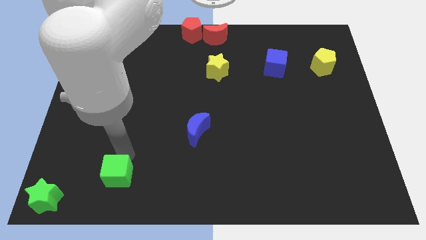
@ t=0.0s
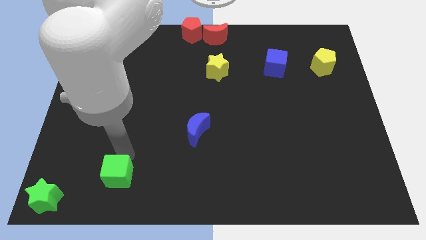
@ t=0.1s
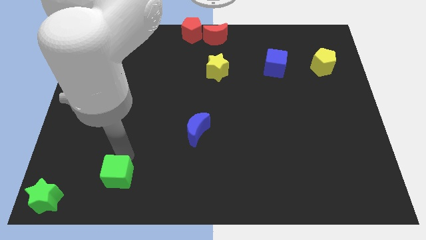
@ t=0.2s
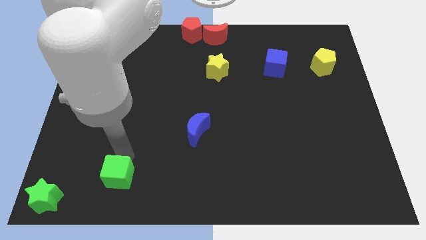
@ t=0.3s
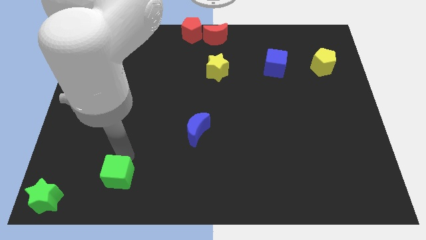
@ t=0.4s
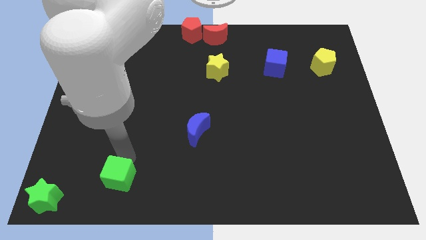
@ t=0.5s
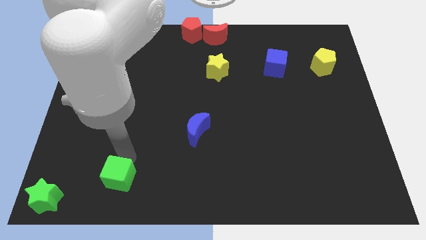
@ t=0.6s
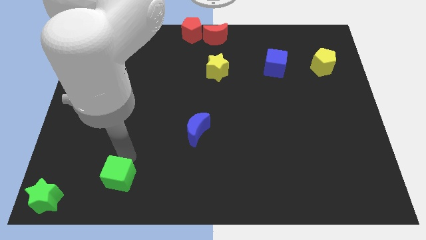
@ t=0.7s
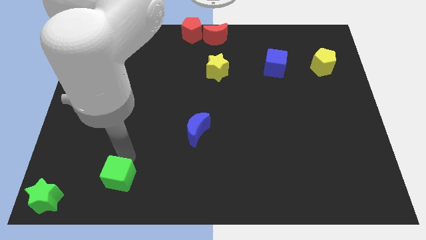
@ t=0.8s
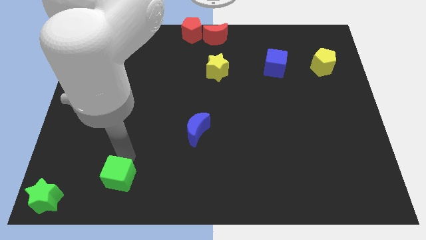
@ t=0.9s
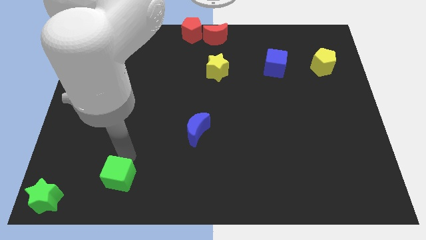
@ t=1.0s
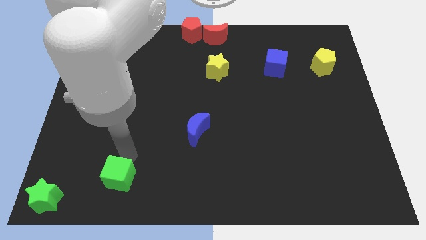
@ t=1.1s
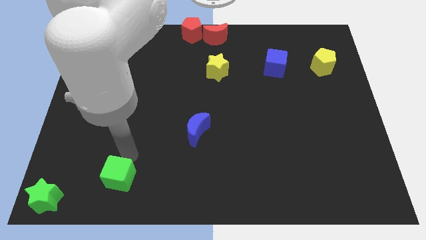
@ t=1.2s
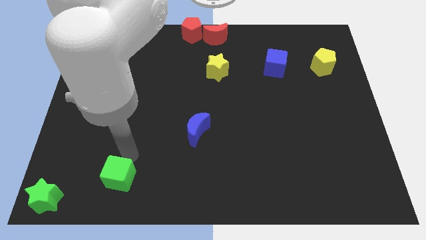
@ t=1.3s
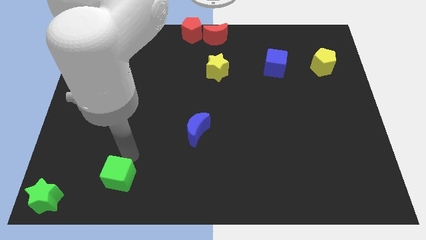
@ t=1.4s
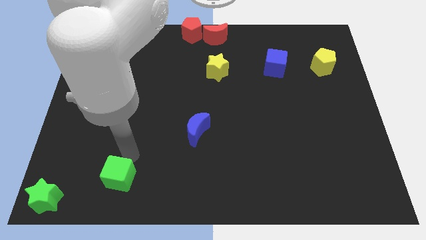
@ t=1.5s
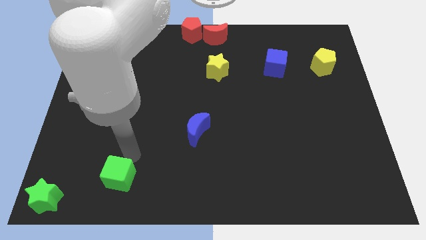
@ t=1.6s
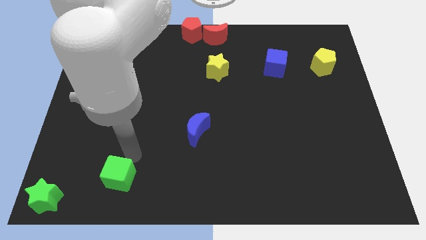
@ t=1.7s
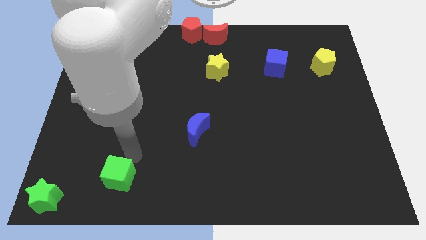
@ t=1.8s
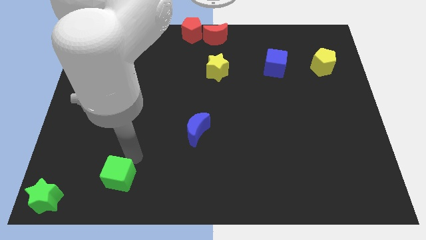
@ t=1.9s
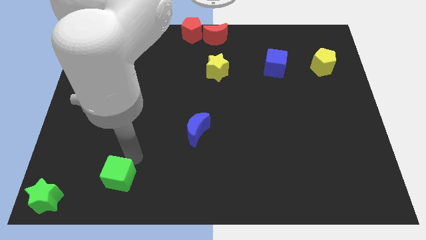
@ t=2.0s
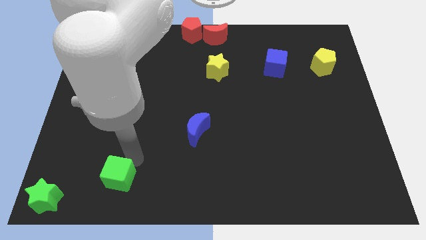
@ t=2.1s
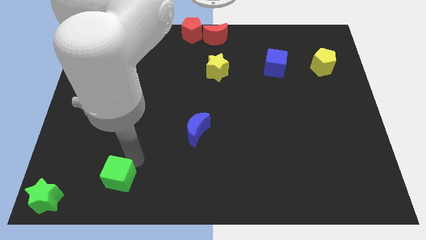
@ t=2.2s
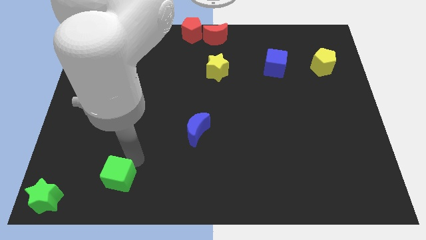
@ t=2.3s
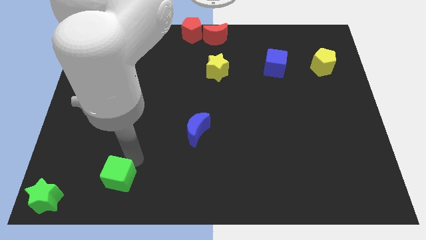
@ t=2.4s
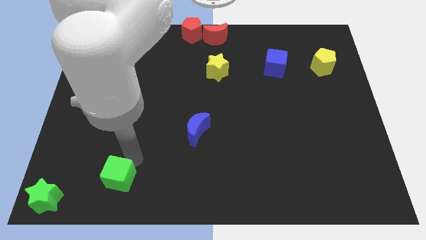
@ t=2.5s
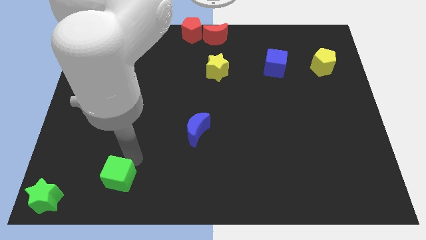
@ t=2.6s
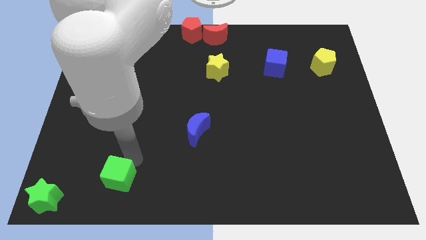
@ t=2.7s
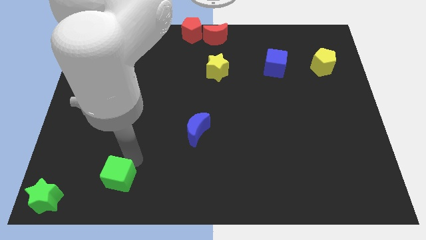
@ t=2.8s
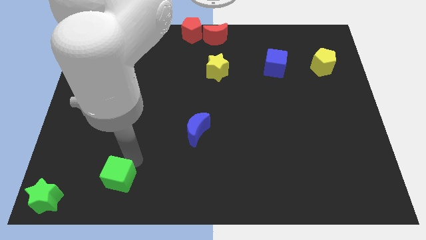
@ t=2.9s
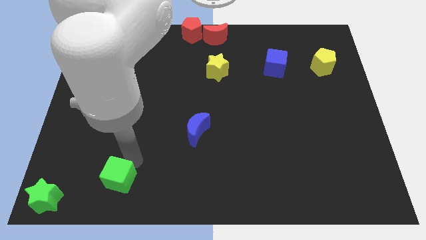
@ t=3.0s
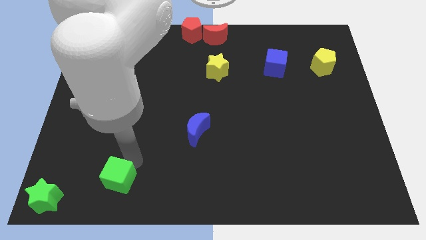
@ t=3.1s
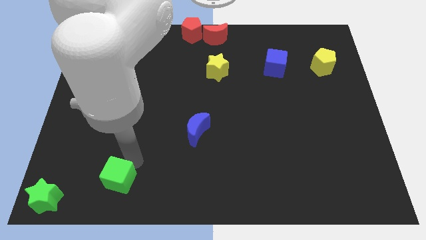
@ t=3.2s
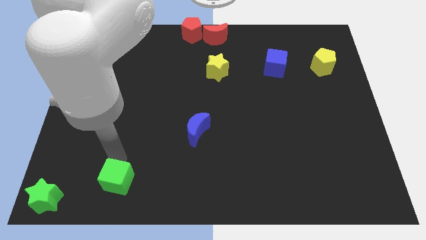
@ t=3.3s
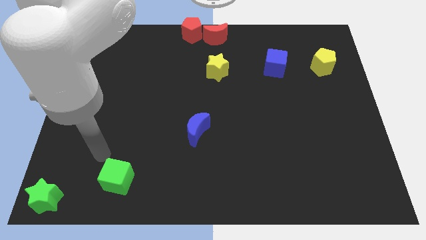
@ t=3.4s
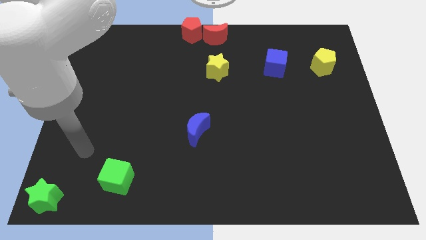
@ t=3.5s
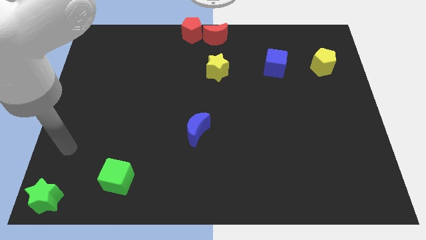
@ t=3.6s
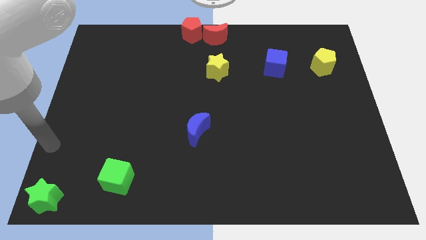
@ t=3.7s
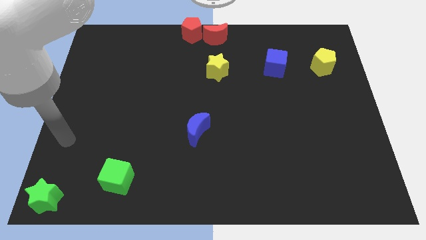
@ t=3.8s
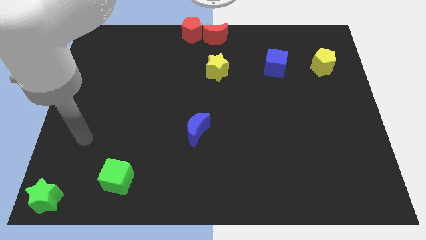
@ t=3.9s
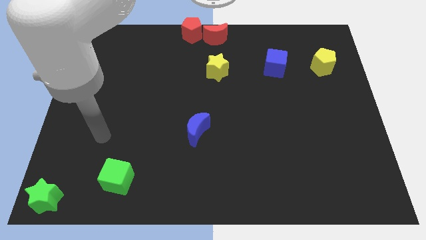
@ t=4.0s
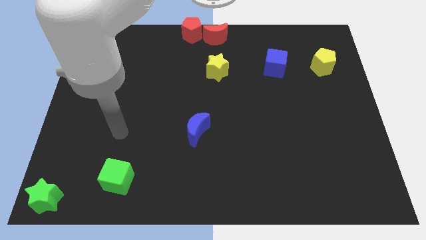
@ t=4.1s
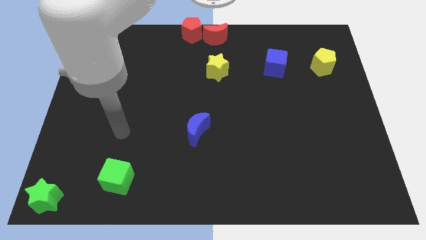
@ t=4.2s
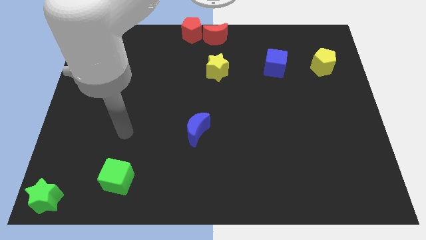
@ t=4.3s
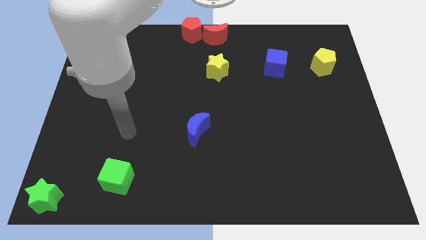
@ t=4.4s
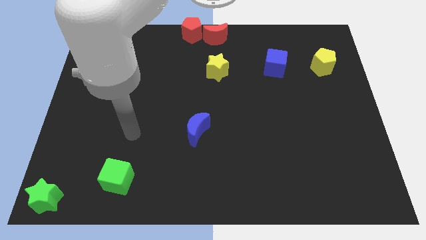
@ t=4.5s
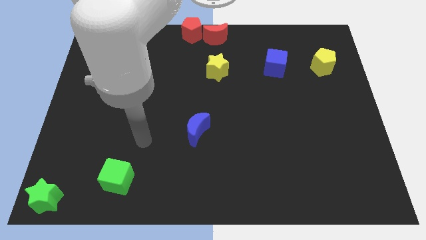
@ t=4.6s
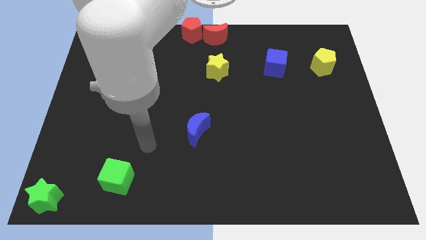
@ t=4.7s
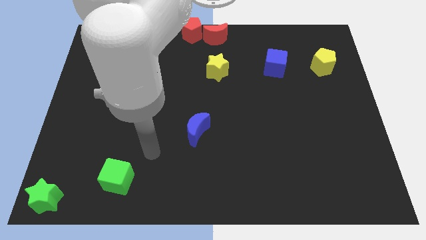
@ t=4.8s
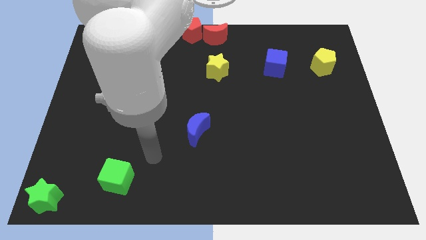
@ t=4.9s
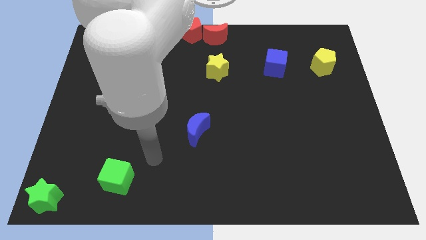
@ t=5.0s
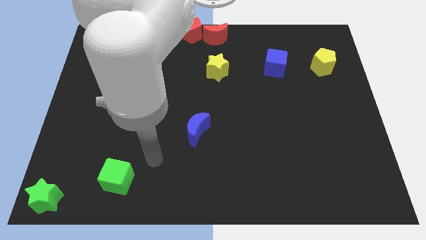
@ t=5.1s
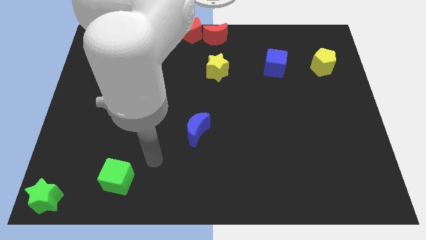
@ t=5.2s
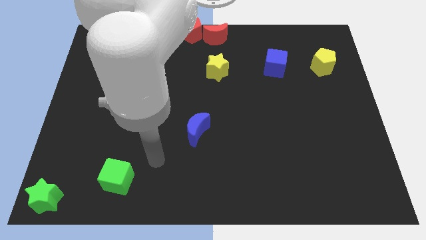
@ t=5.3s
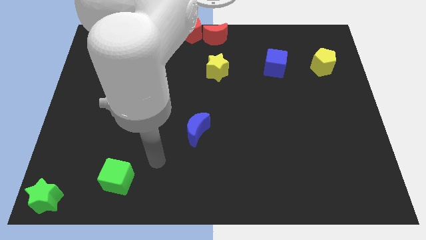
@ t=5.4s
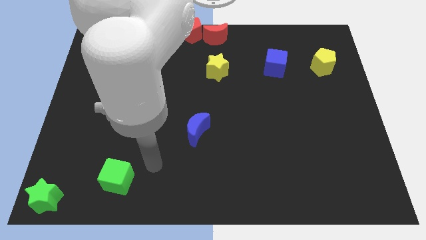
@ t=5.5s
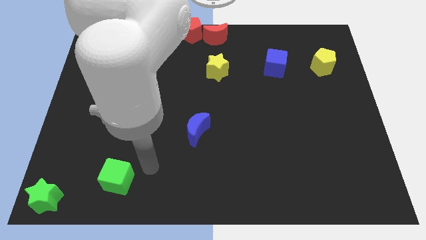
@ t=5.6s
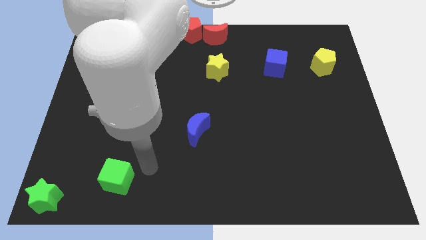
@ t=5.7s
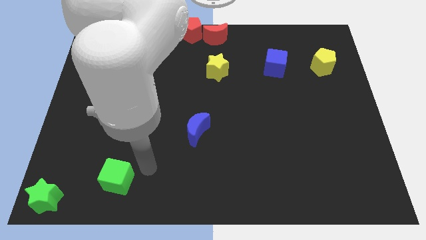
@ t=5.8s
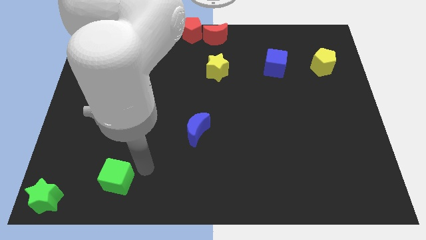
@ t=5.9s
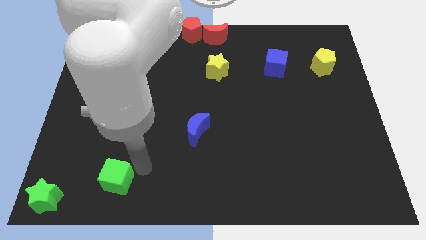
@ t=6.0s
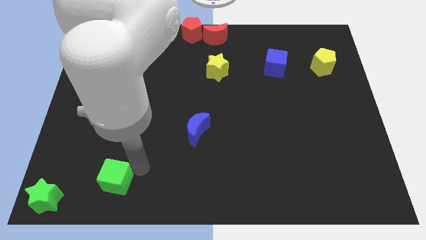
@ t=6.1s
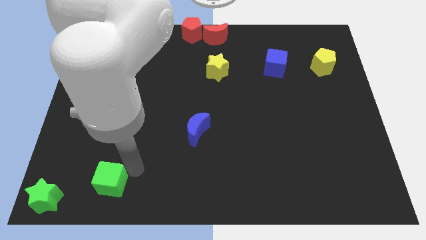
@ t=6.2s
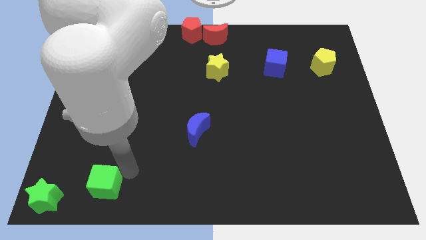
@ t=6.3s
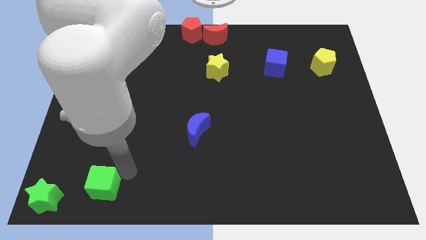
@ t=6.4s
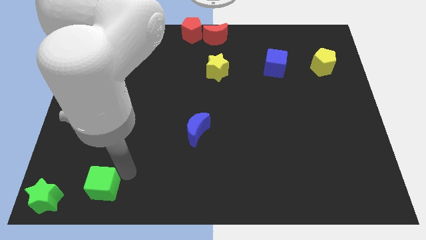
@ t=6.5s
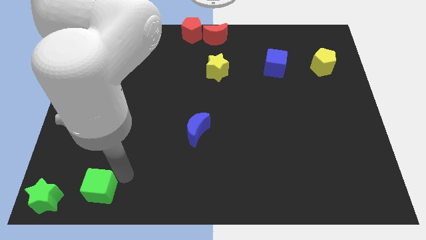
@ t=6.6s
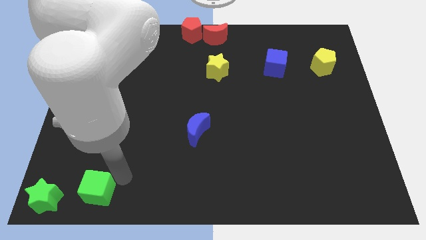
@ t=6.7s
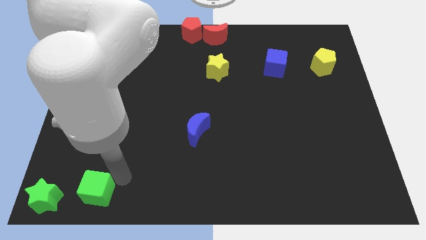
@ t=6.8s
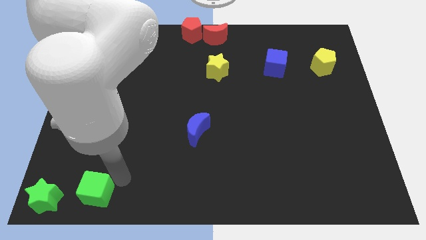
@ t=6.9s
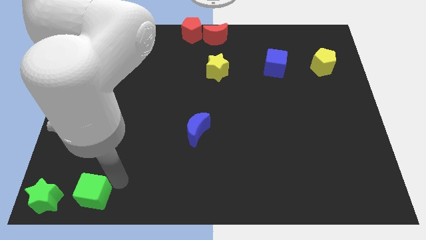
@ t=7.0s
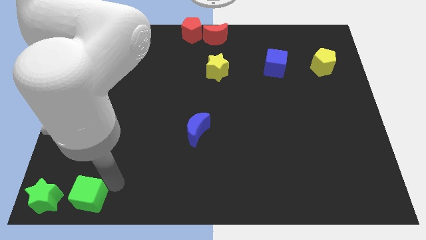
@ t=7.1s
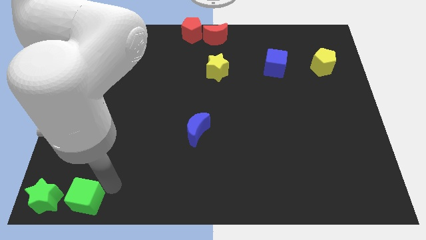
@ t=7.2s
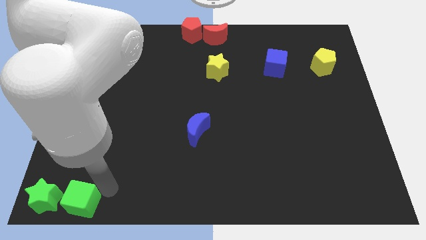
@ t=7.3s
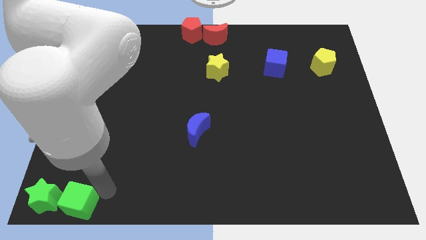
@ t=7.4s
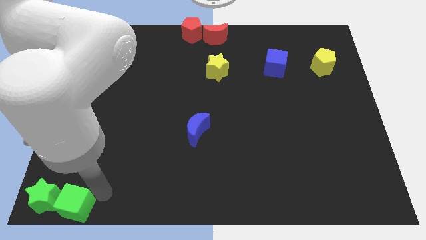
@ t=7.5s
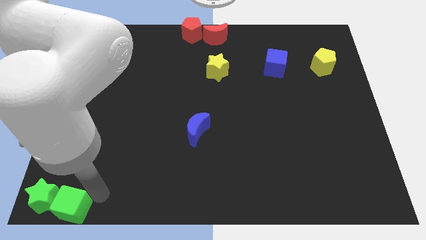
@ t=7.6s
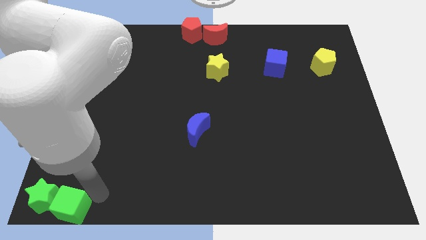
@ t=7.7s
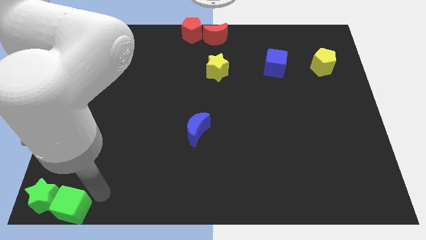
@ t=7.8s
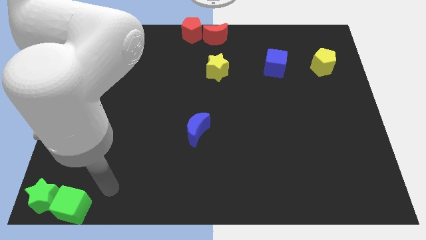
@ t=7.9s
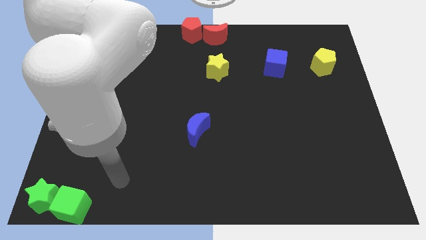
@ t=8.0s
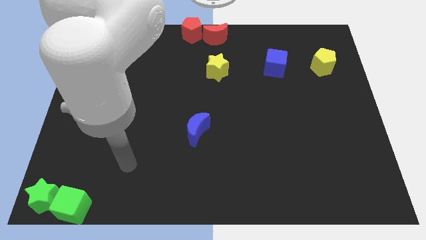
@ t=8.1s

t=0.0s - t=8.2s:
move the green cube right beside the green star
